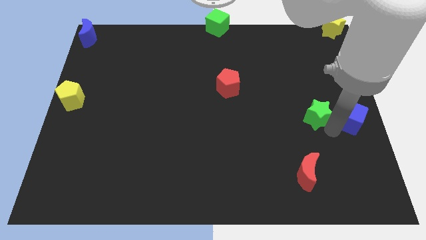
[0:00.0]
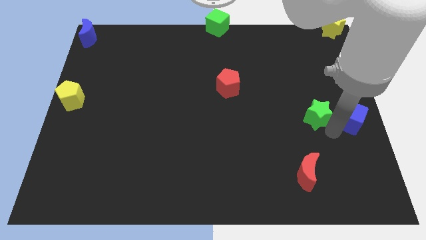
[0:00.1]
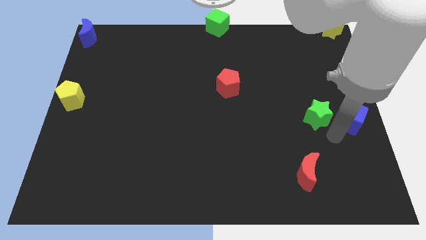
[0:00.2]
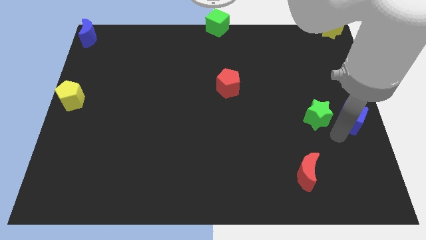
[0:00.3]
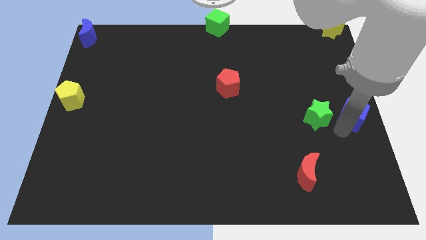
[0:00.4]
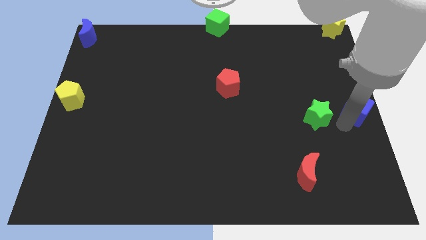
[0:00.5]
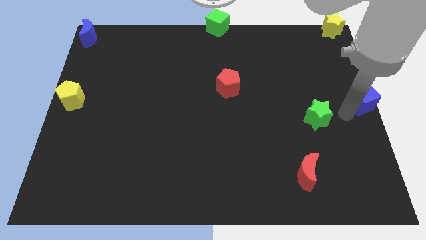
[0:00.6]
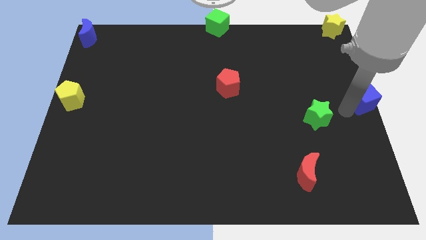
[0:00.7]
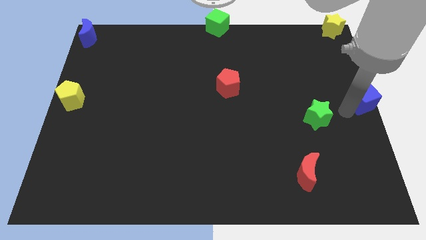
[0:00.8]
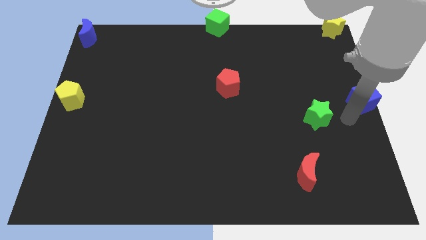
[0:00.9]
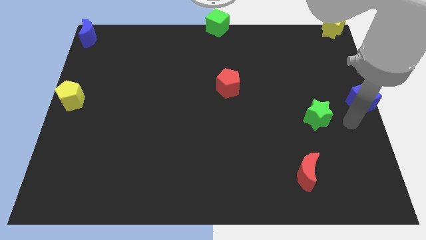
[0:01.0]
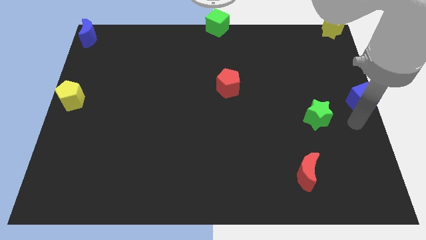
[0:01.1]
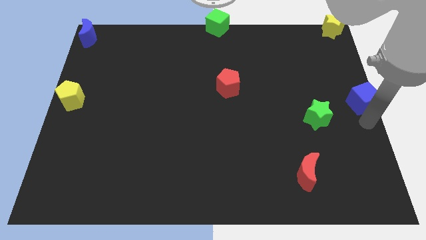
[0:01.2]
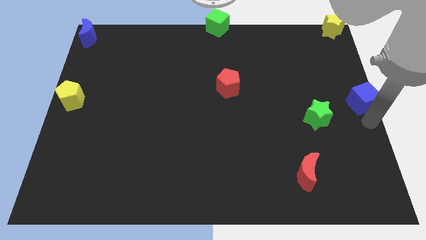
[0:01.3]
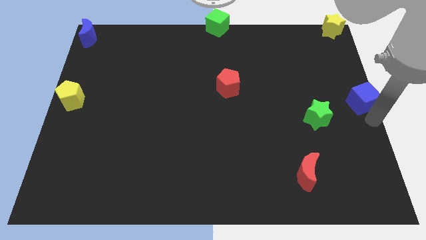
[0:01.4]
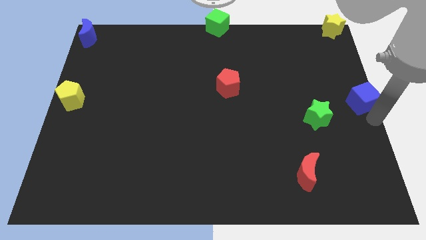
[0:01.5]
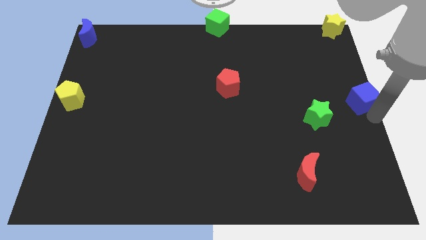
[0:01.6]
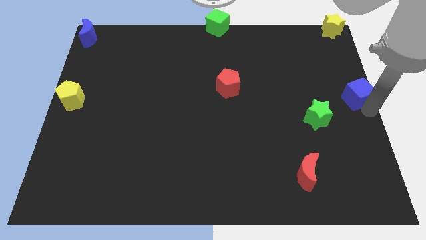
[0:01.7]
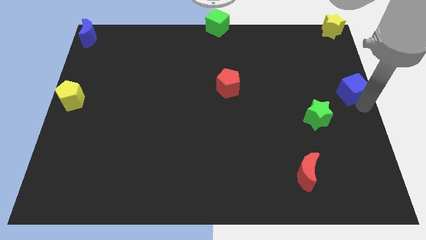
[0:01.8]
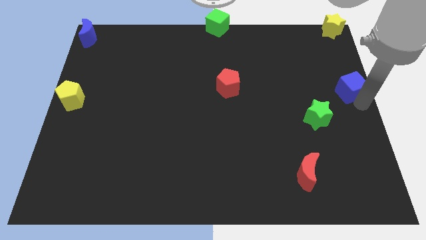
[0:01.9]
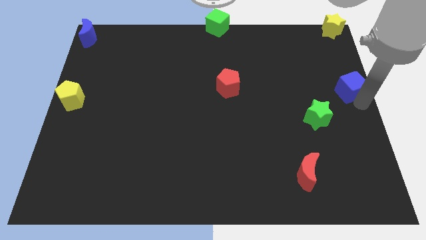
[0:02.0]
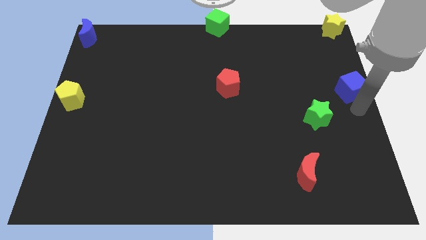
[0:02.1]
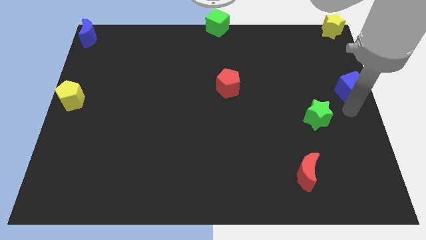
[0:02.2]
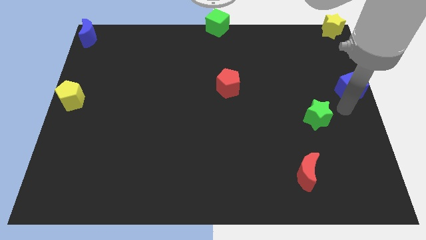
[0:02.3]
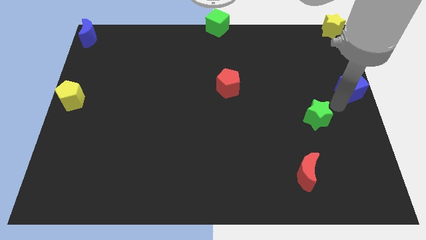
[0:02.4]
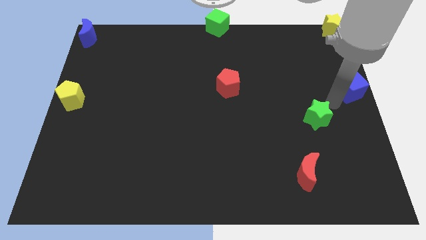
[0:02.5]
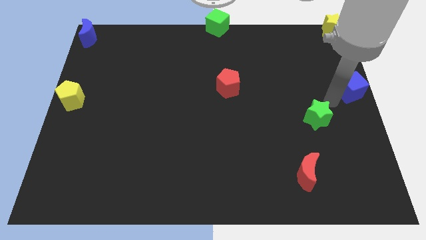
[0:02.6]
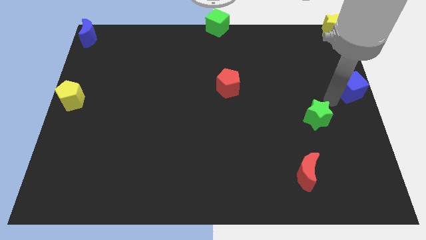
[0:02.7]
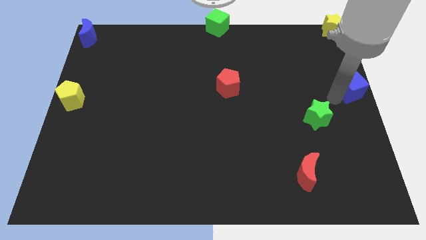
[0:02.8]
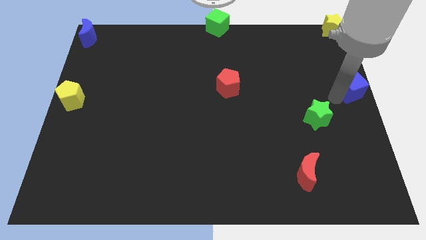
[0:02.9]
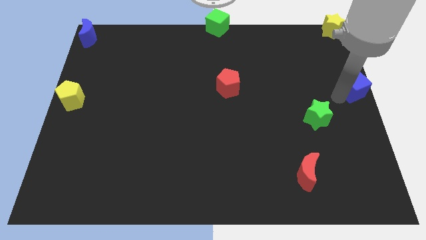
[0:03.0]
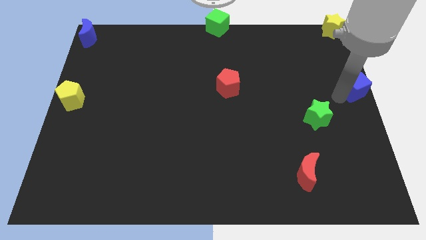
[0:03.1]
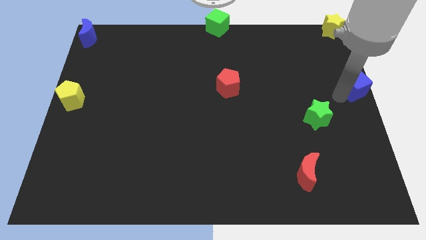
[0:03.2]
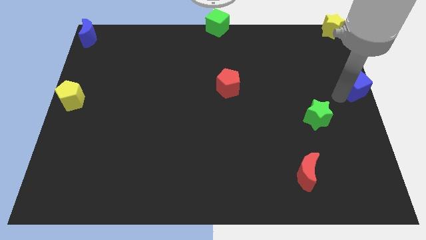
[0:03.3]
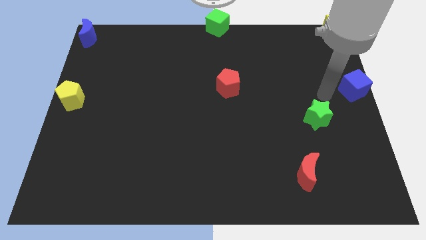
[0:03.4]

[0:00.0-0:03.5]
place the blue cube to the bottom of the yellow star

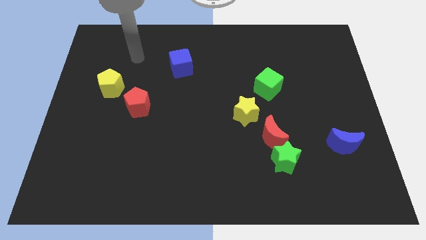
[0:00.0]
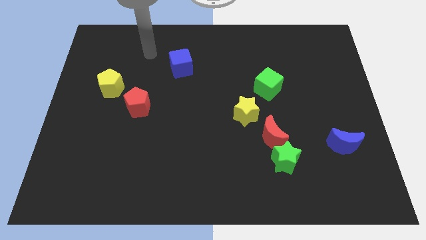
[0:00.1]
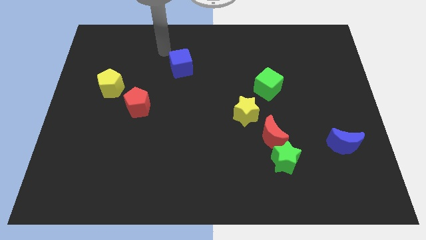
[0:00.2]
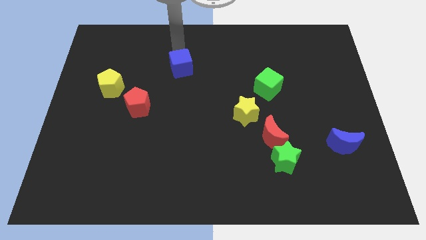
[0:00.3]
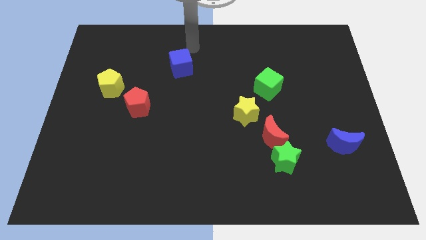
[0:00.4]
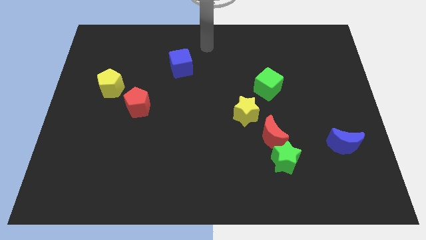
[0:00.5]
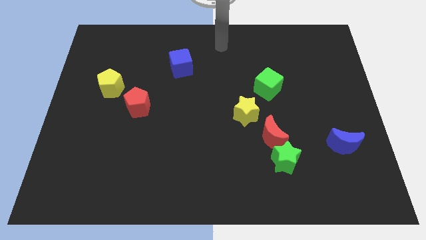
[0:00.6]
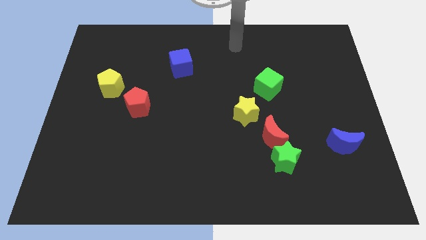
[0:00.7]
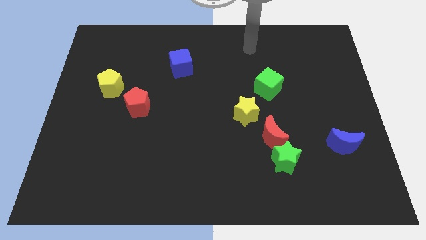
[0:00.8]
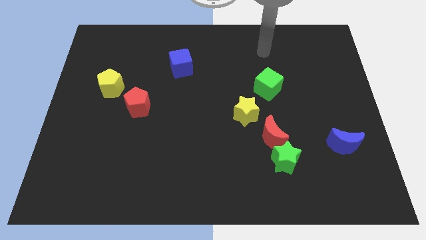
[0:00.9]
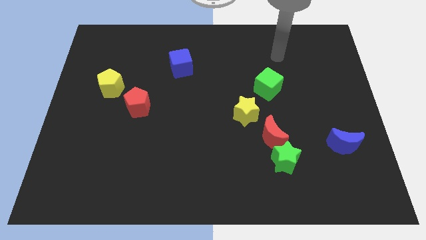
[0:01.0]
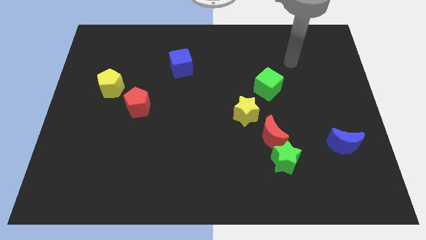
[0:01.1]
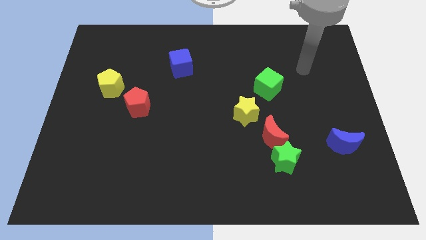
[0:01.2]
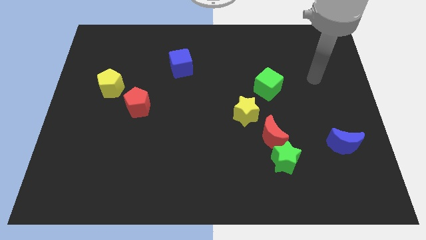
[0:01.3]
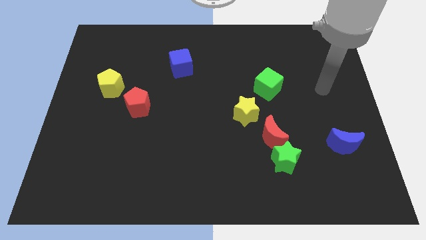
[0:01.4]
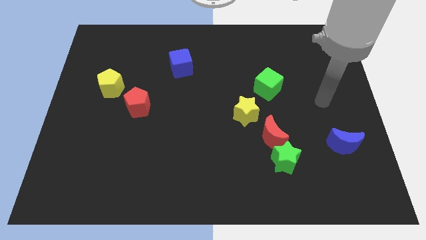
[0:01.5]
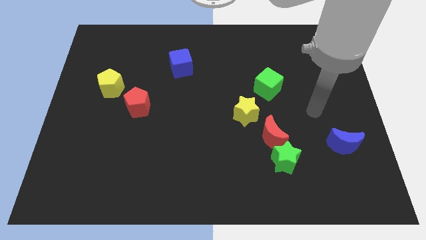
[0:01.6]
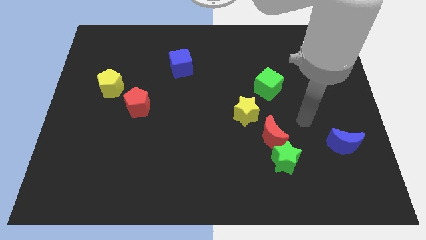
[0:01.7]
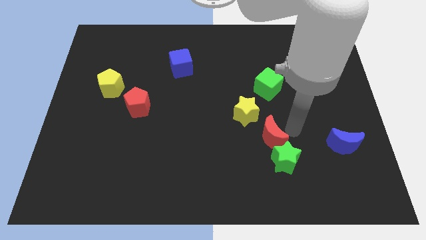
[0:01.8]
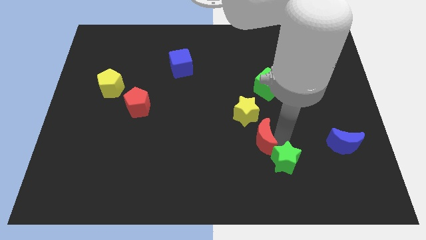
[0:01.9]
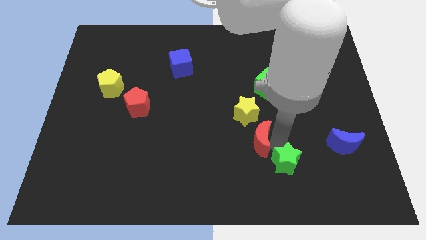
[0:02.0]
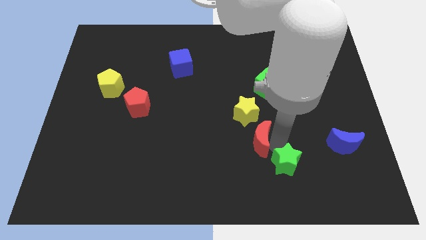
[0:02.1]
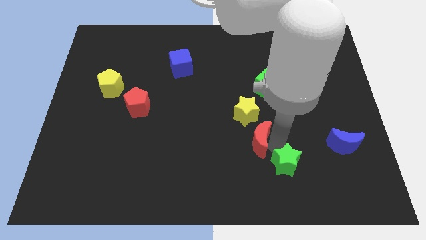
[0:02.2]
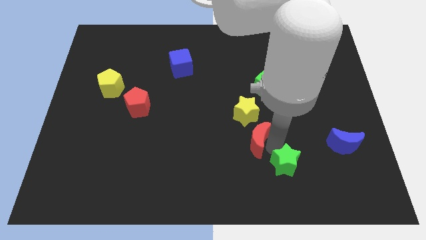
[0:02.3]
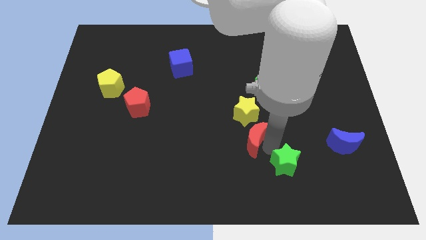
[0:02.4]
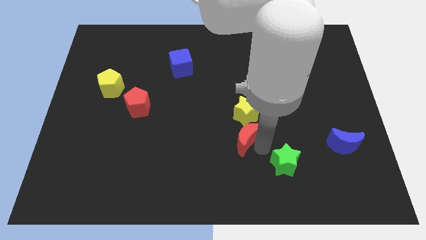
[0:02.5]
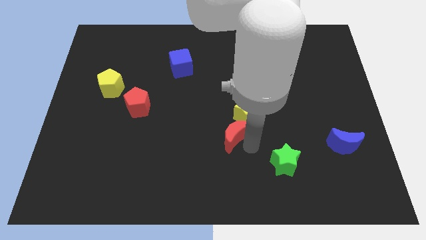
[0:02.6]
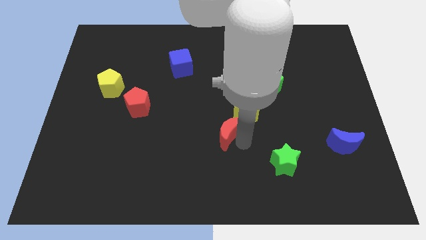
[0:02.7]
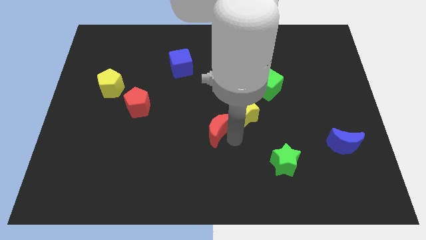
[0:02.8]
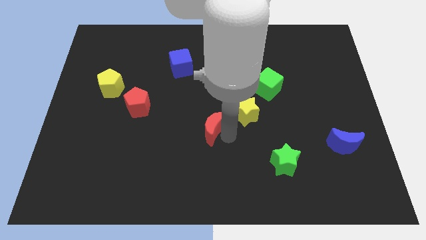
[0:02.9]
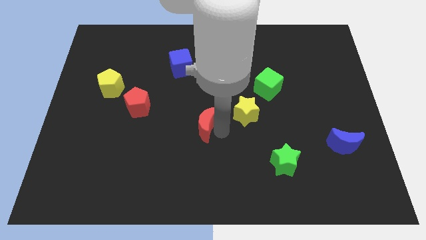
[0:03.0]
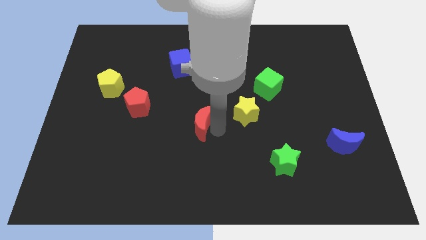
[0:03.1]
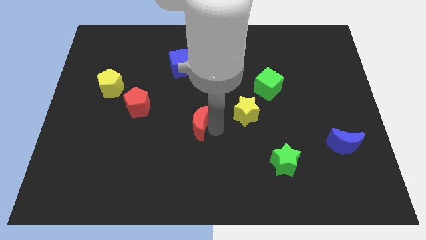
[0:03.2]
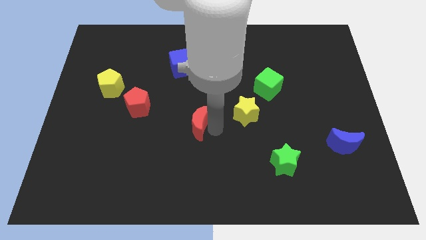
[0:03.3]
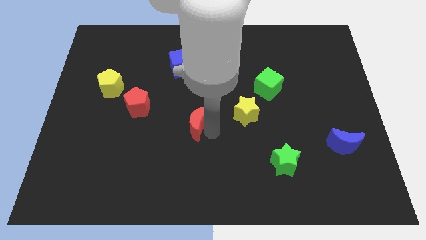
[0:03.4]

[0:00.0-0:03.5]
place the red crescent at center of the board

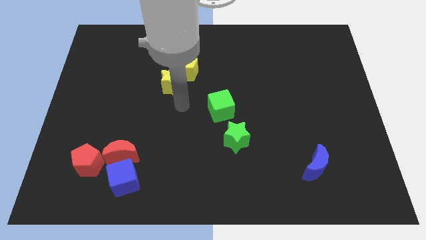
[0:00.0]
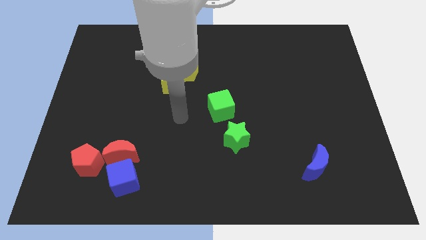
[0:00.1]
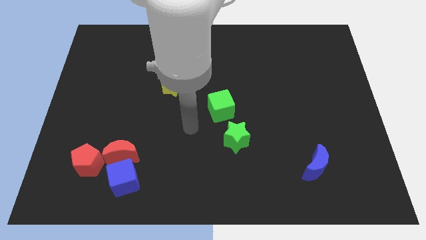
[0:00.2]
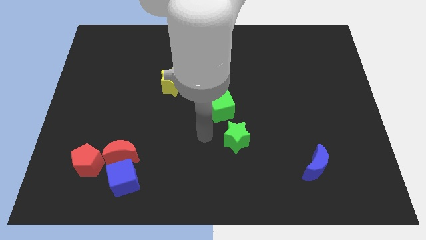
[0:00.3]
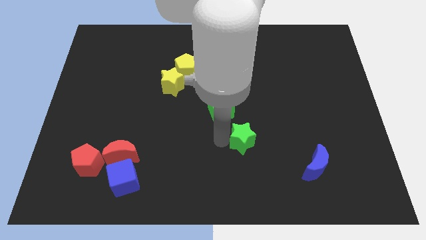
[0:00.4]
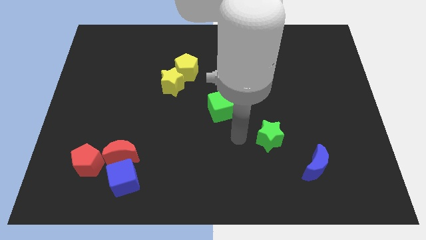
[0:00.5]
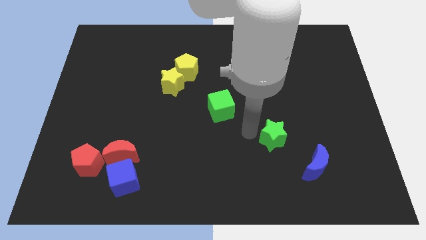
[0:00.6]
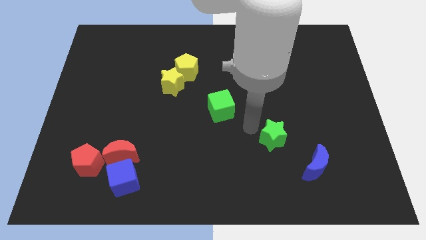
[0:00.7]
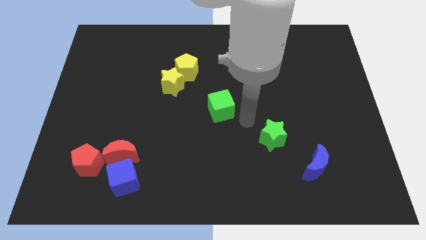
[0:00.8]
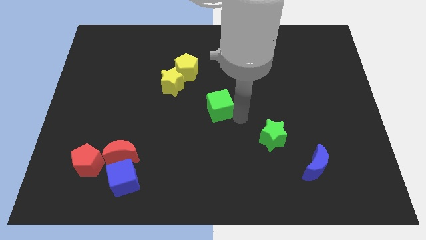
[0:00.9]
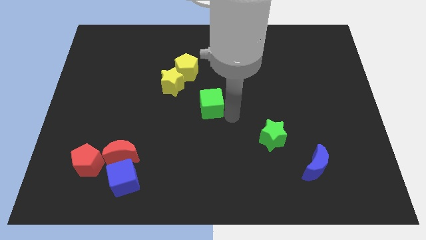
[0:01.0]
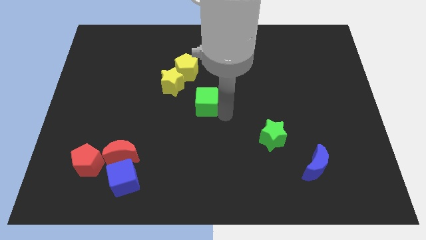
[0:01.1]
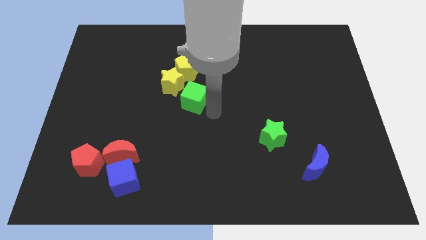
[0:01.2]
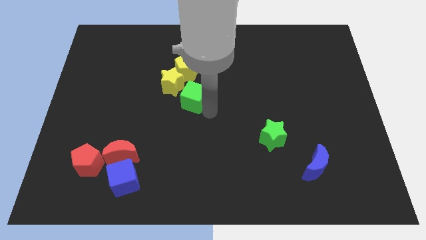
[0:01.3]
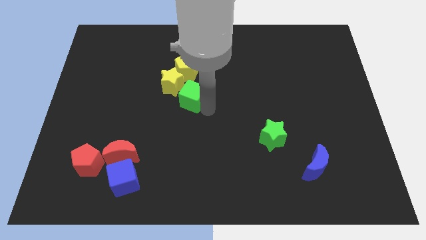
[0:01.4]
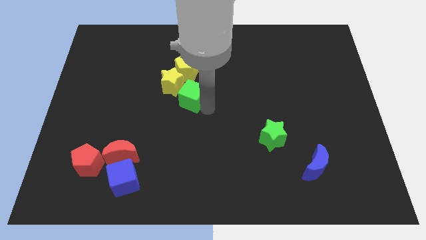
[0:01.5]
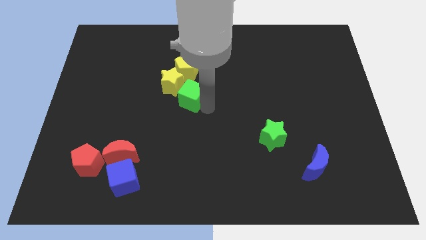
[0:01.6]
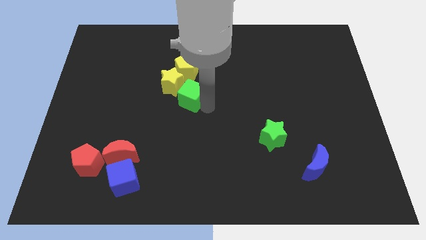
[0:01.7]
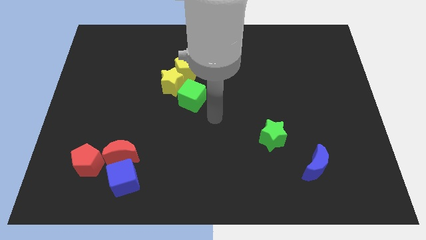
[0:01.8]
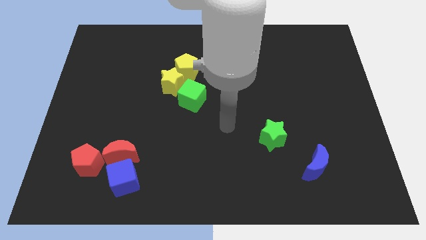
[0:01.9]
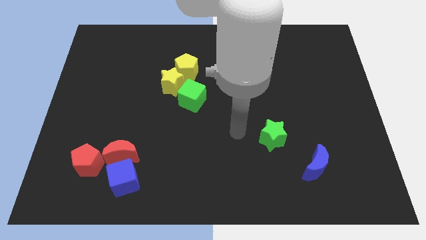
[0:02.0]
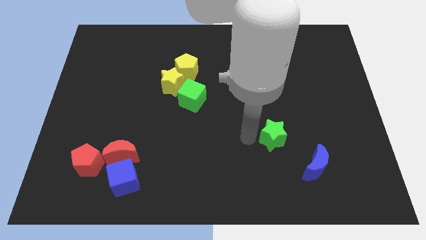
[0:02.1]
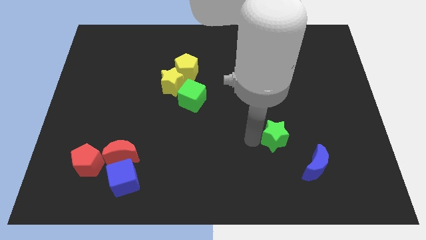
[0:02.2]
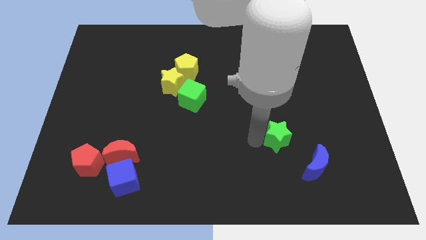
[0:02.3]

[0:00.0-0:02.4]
separate the green cube and the green star
